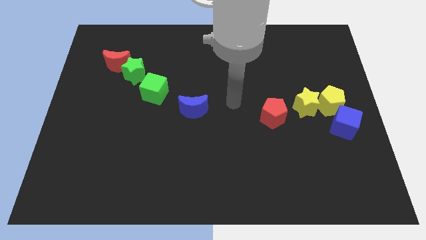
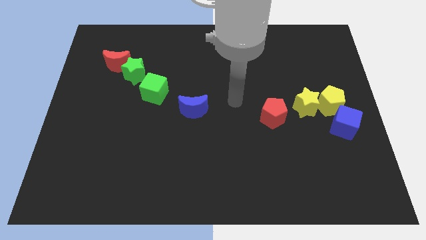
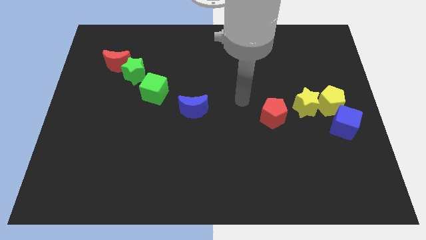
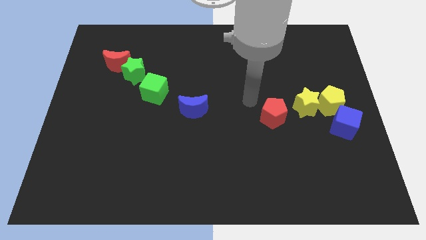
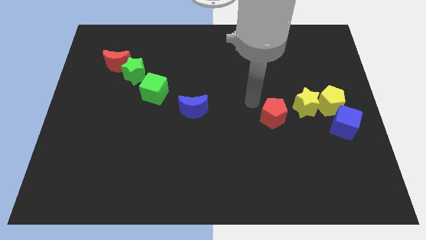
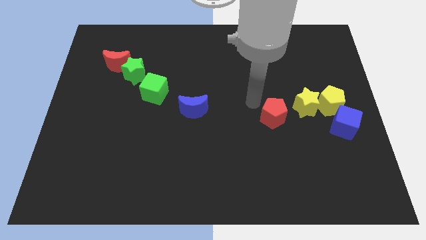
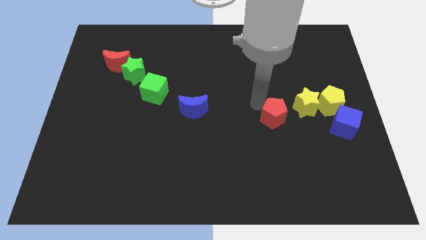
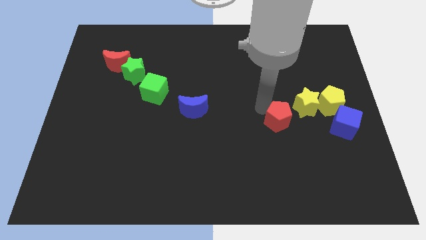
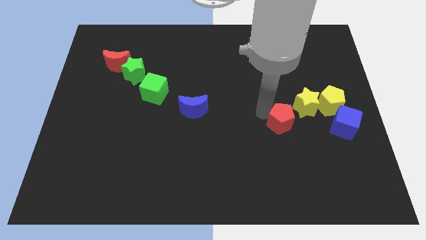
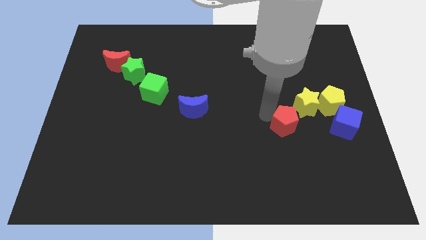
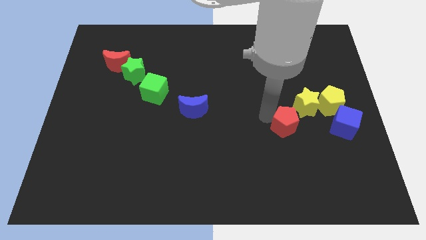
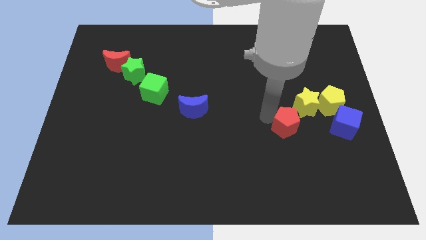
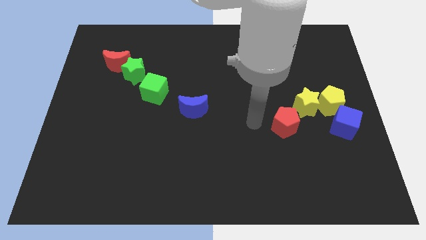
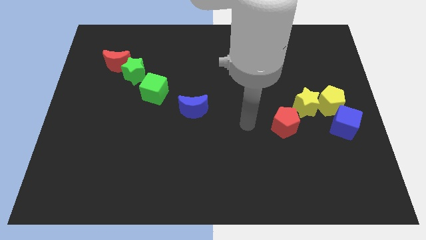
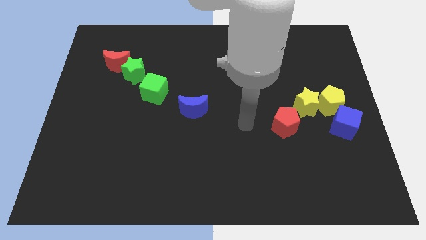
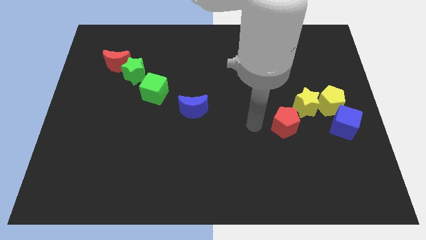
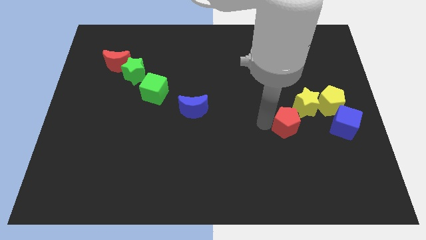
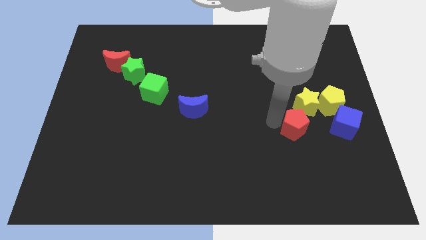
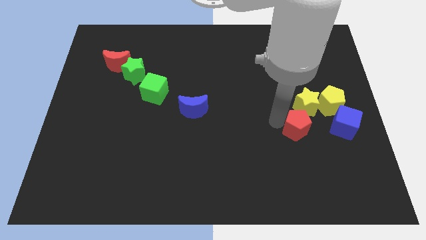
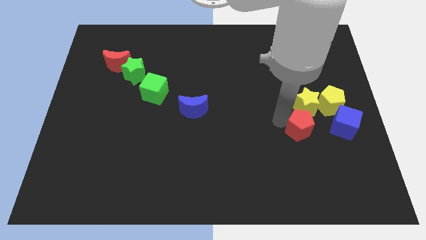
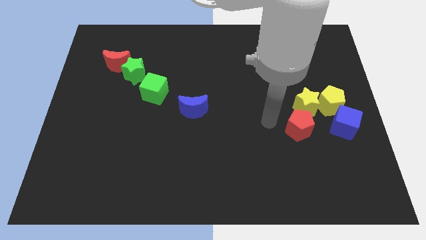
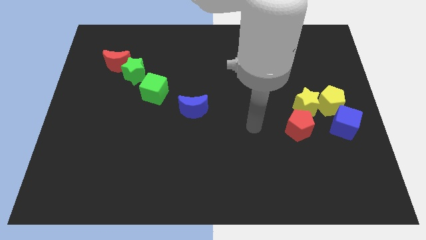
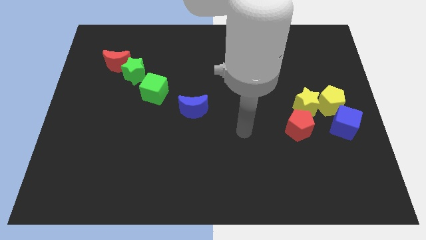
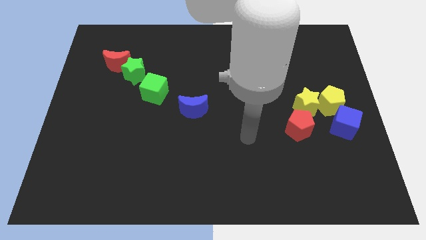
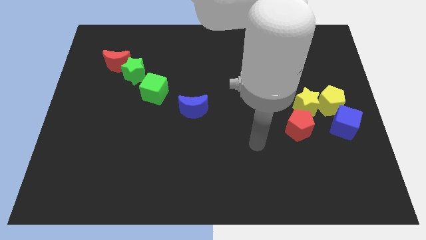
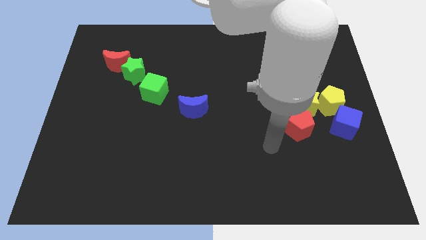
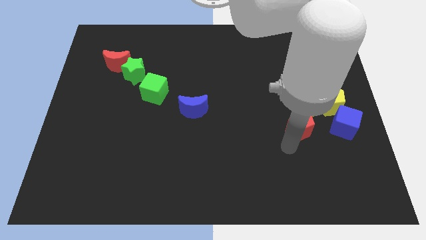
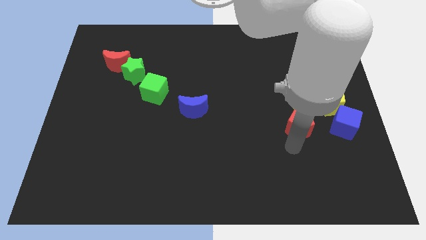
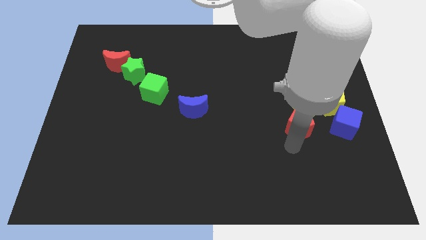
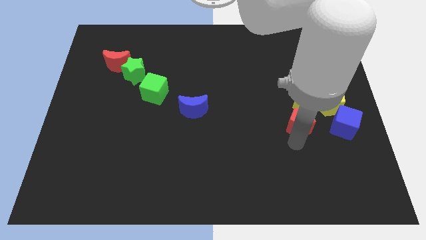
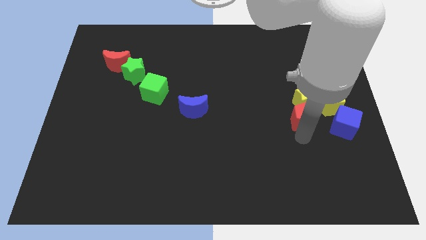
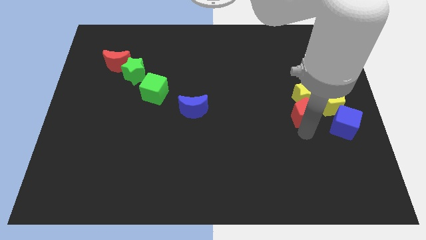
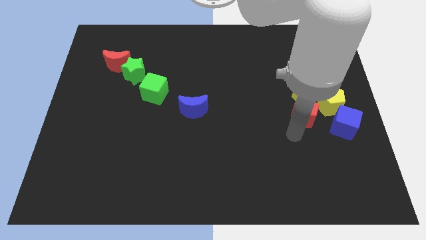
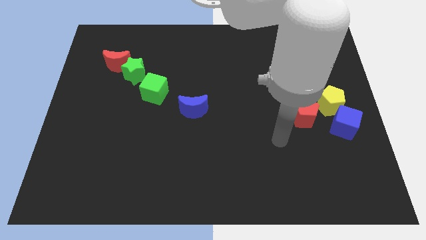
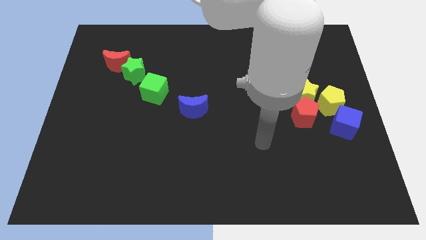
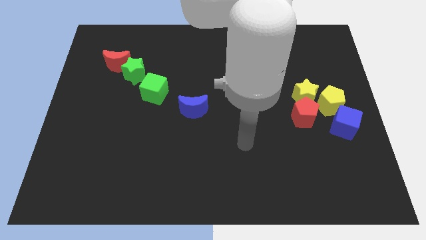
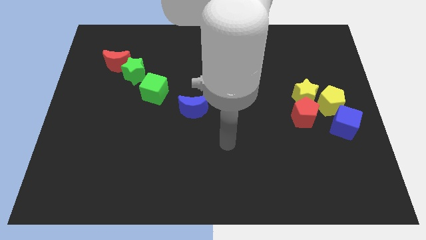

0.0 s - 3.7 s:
push red pentagon at the bottom of yellow star

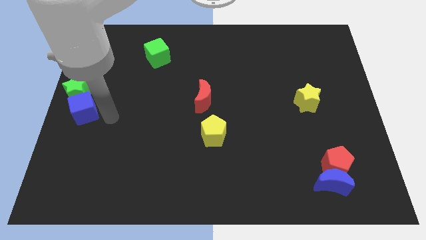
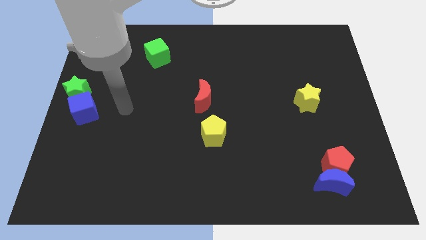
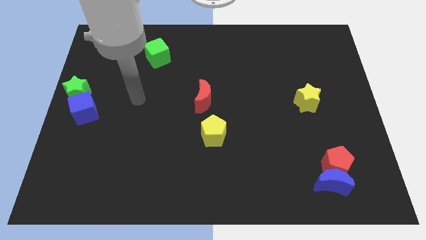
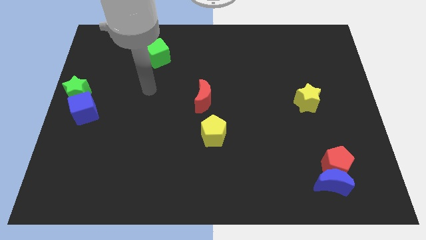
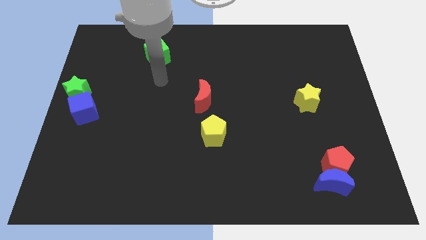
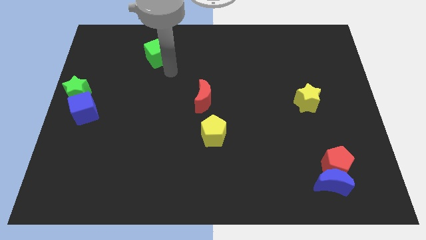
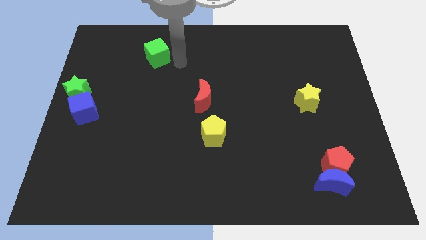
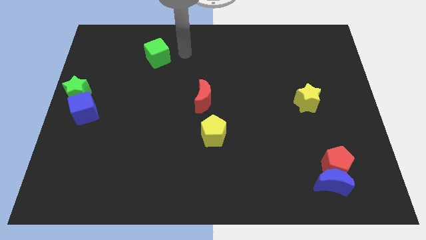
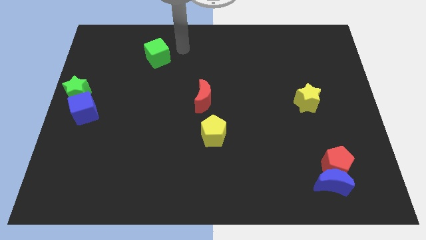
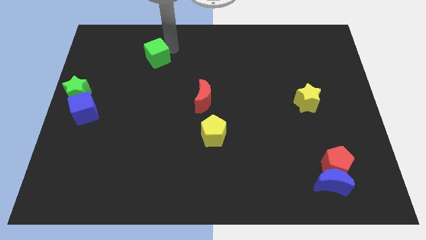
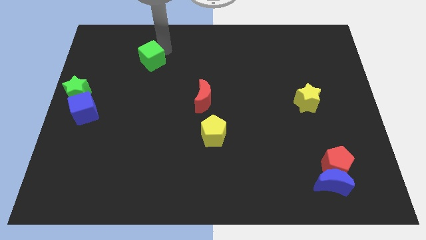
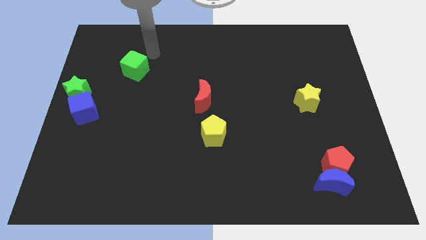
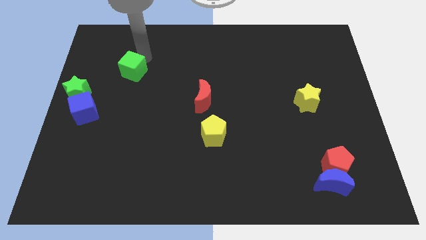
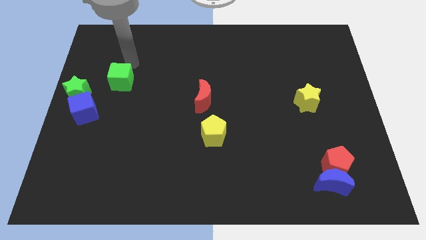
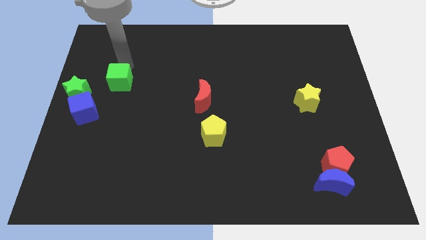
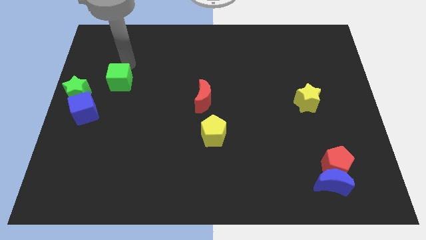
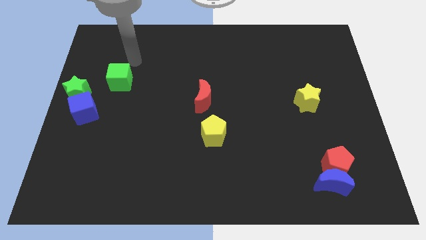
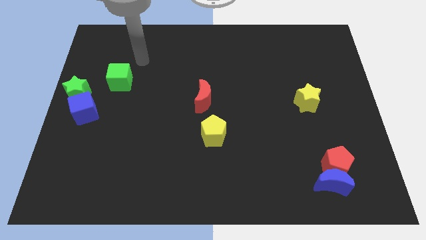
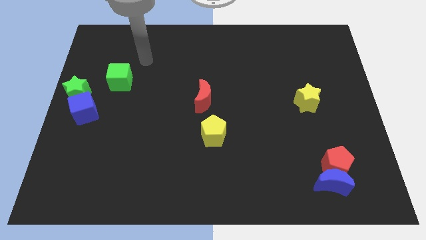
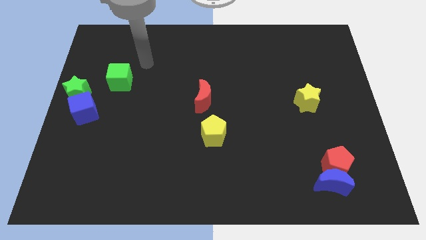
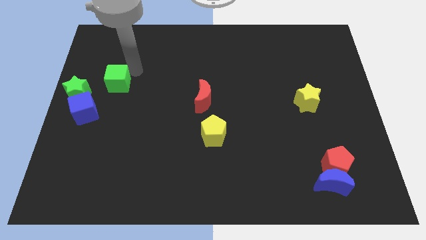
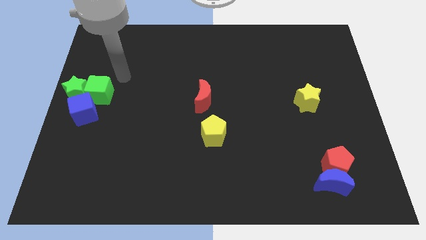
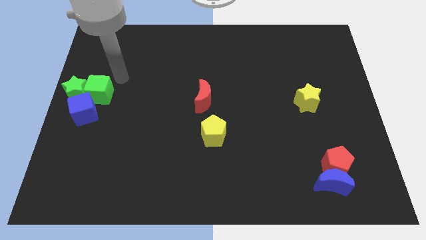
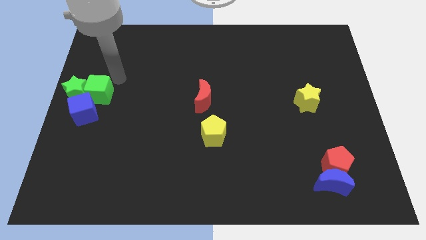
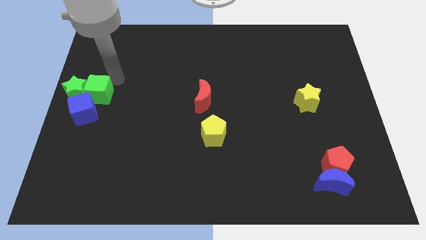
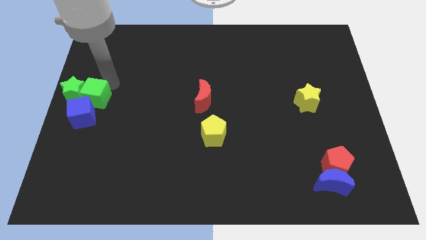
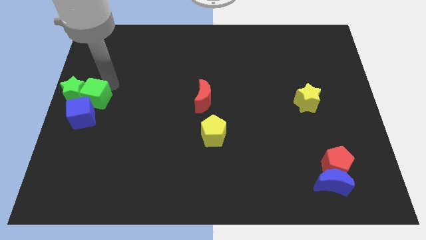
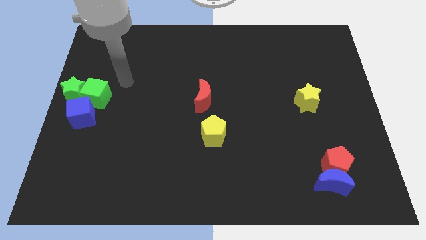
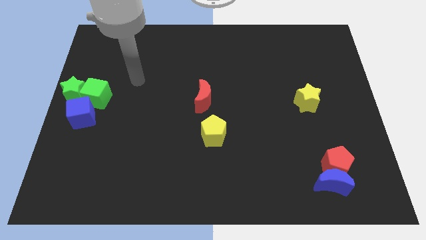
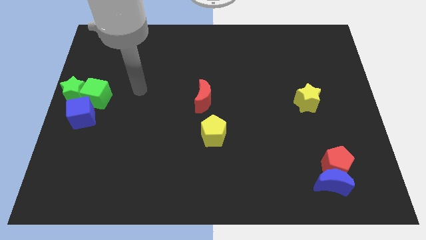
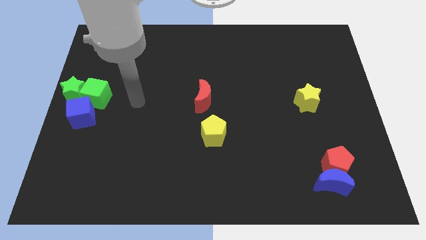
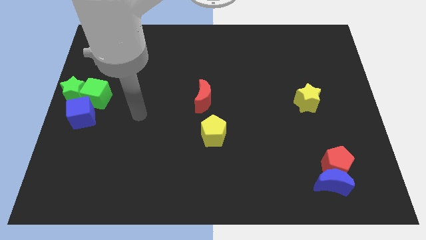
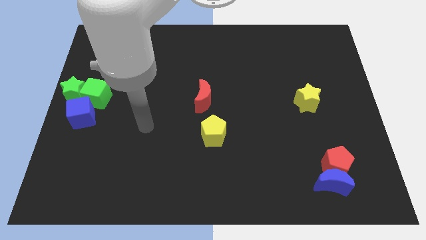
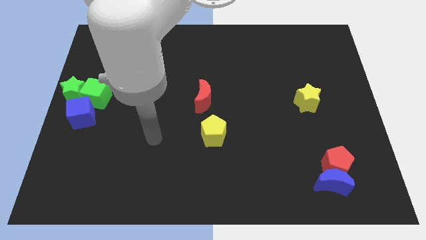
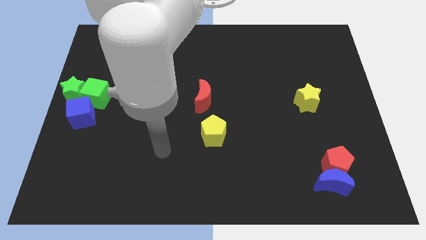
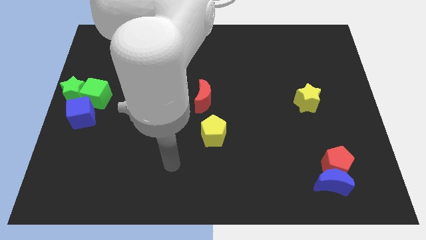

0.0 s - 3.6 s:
move the green cube to the right of the green star

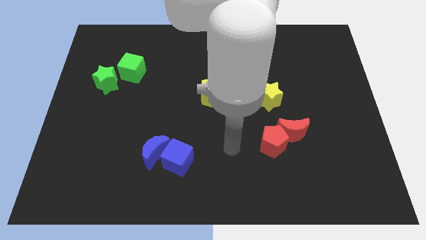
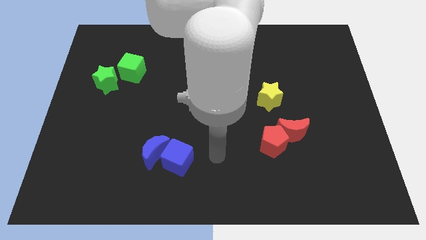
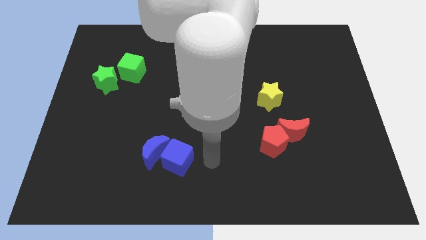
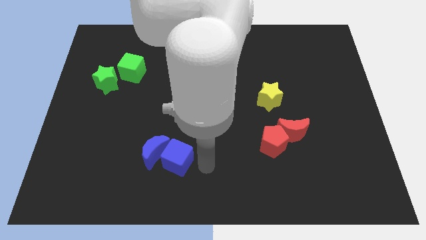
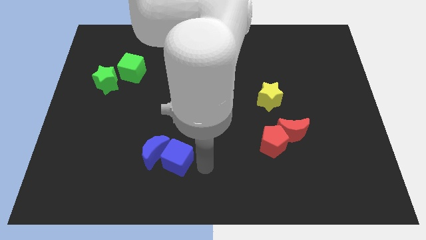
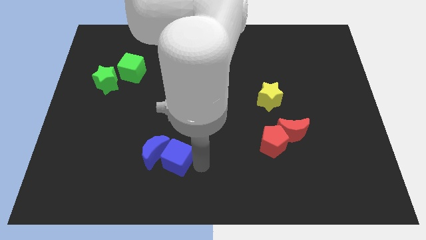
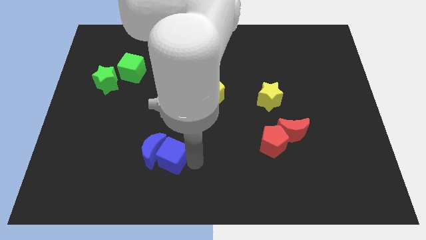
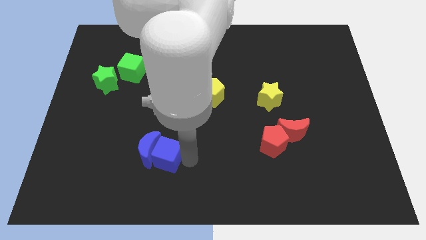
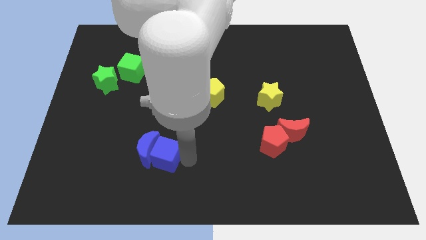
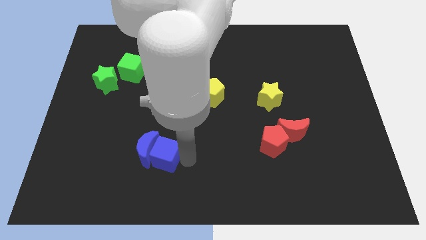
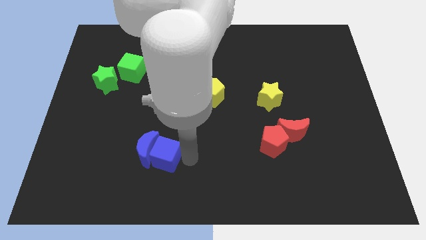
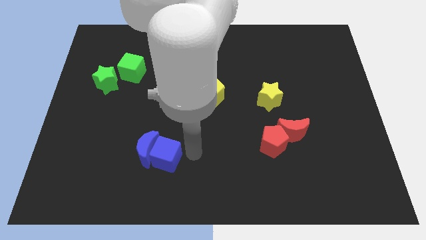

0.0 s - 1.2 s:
slightly push the blue cube close to the blue crescent

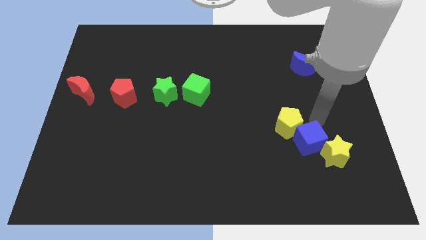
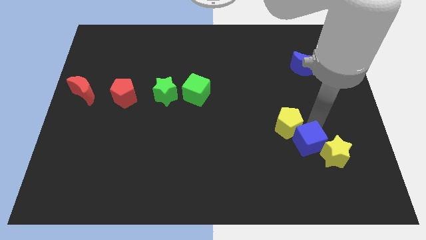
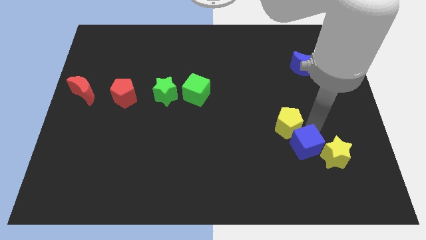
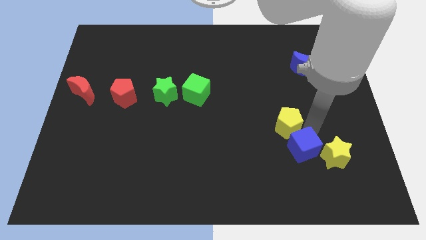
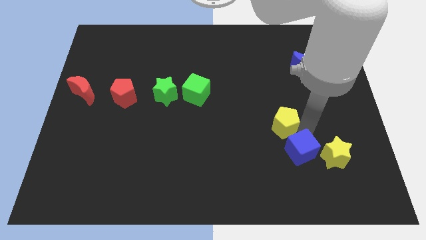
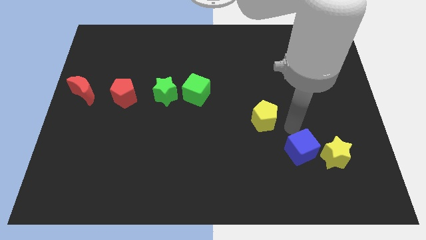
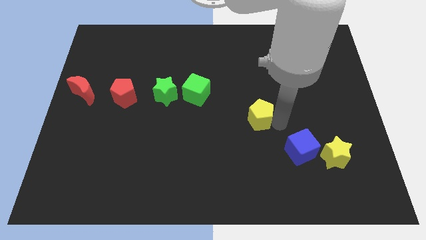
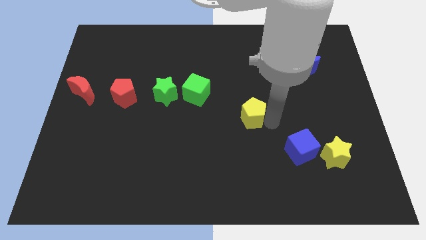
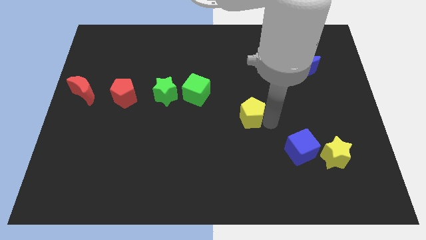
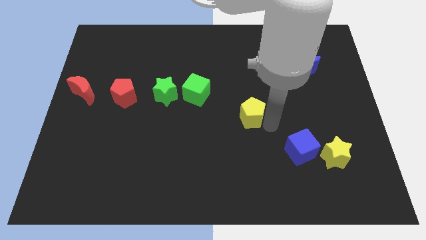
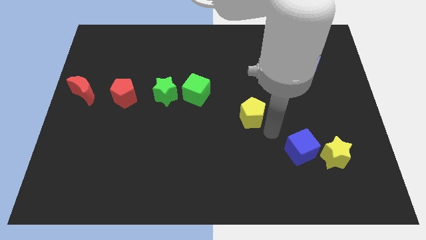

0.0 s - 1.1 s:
separate yellow pentagon away from blue cube
